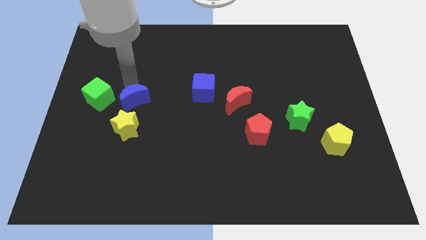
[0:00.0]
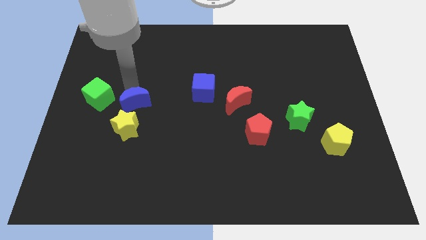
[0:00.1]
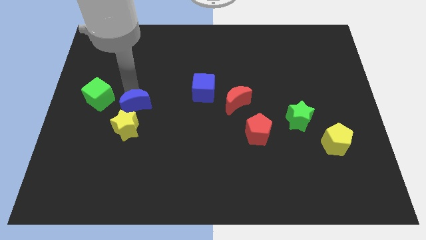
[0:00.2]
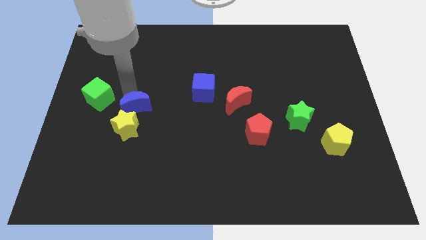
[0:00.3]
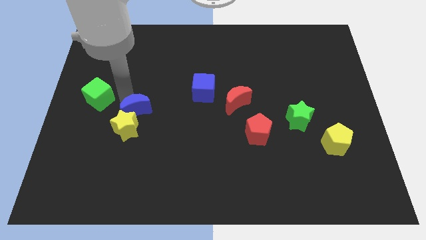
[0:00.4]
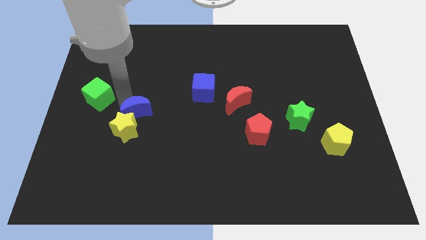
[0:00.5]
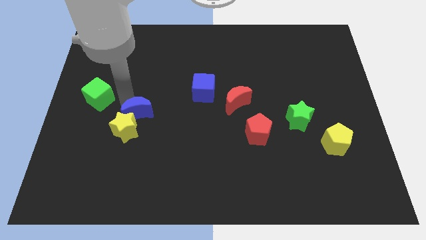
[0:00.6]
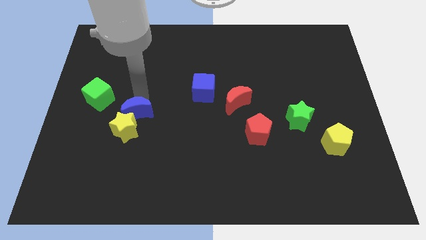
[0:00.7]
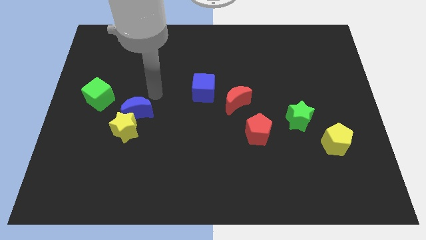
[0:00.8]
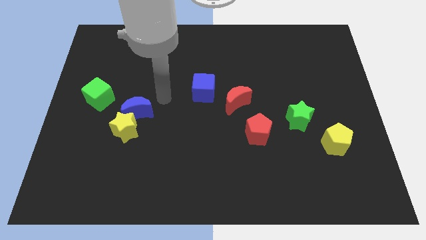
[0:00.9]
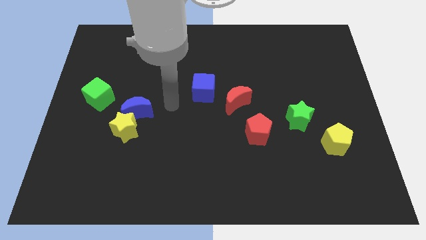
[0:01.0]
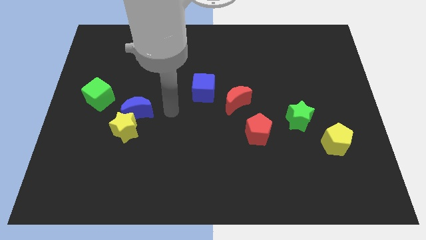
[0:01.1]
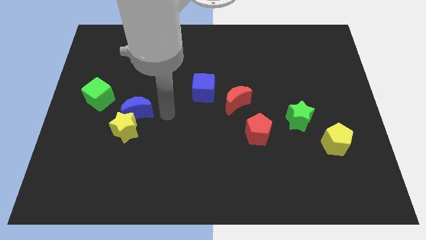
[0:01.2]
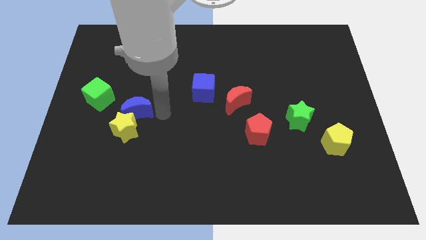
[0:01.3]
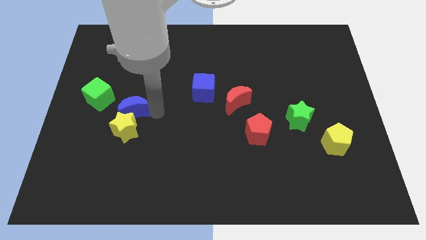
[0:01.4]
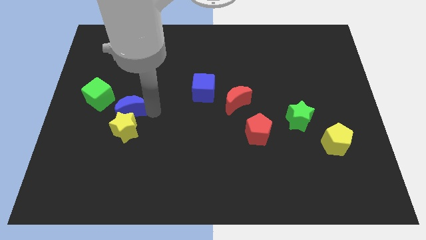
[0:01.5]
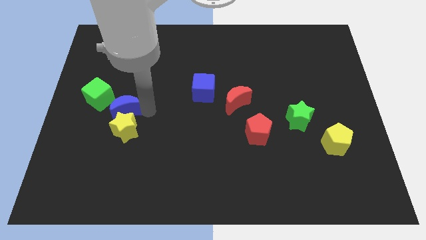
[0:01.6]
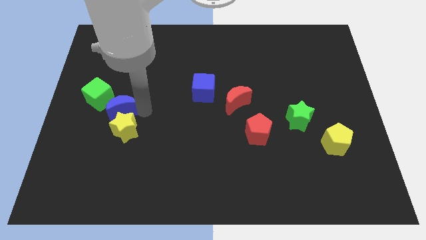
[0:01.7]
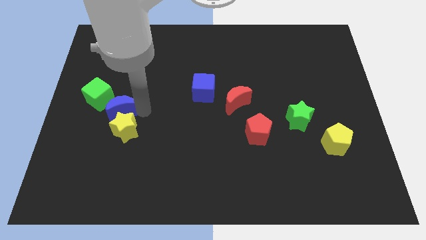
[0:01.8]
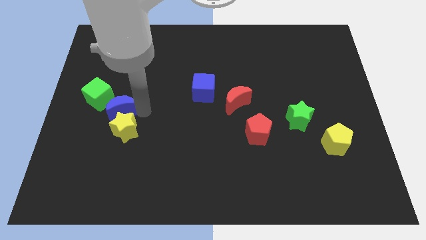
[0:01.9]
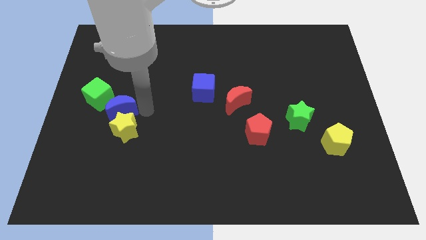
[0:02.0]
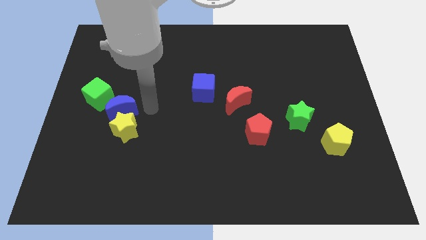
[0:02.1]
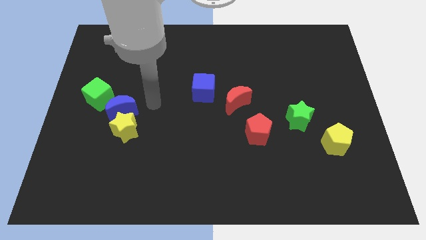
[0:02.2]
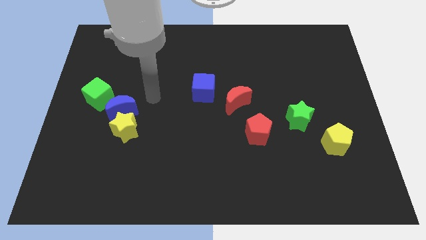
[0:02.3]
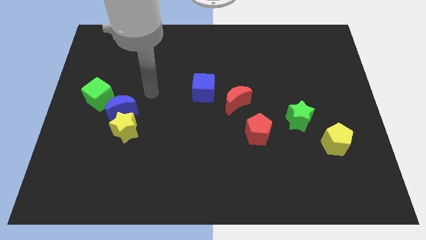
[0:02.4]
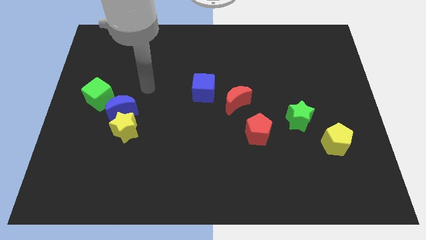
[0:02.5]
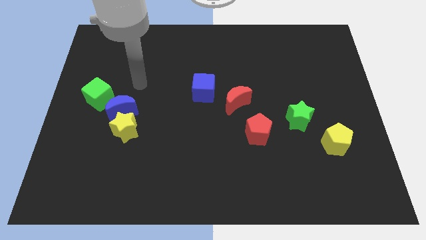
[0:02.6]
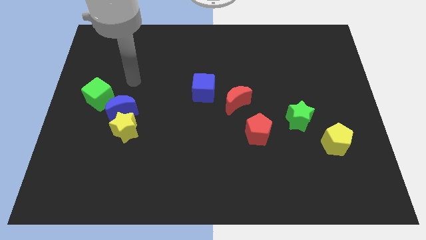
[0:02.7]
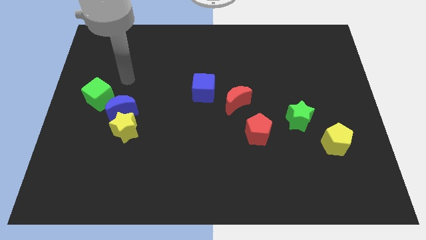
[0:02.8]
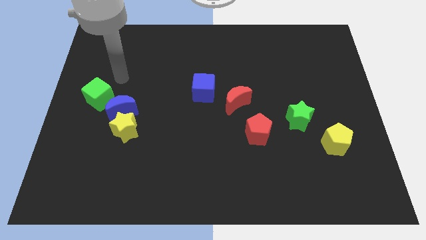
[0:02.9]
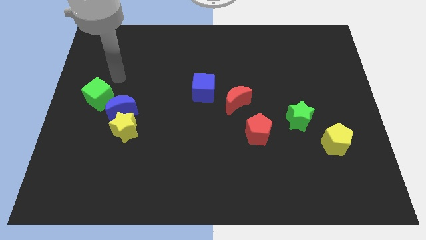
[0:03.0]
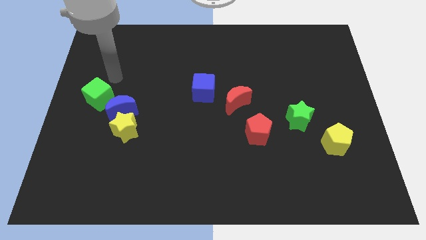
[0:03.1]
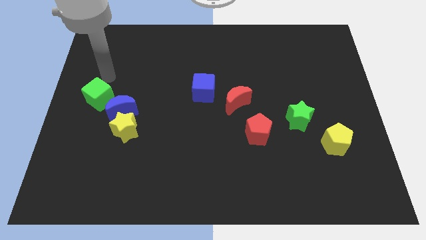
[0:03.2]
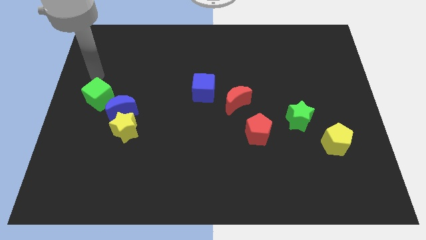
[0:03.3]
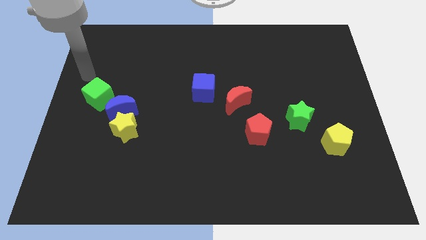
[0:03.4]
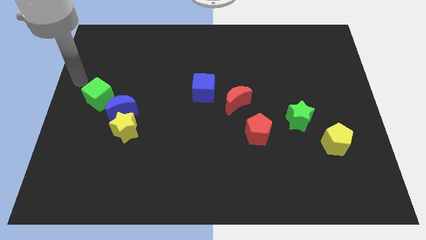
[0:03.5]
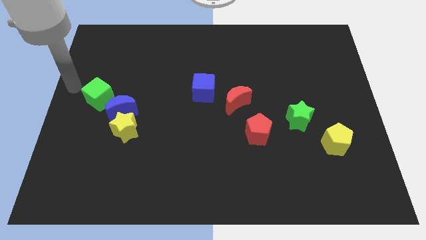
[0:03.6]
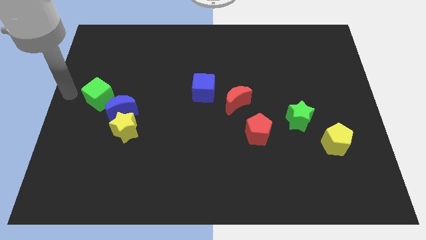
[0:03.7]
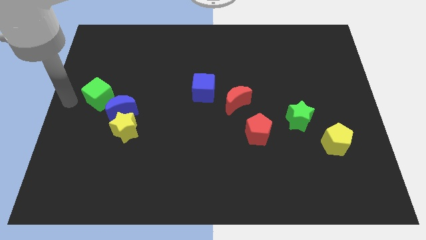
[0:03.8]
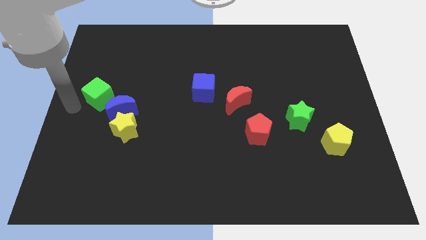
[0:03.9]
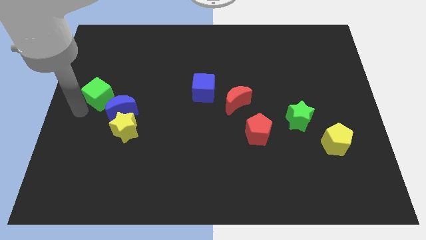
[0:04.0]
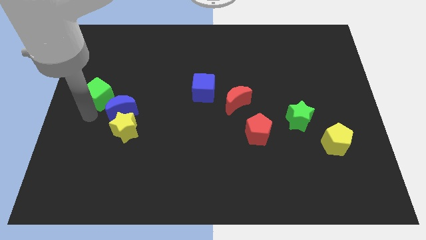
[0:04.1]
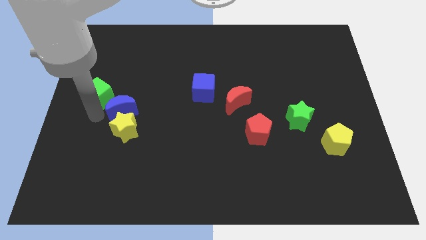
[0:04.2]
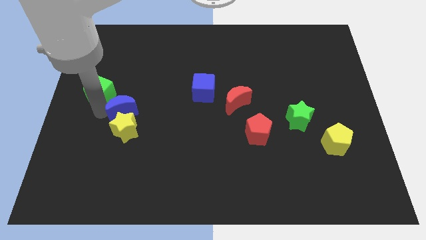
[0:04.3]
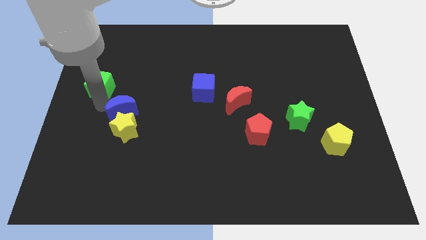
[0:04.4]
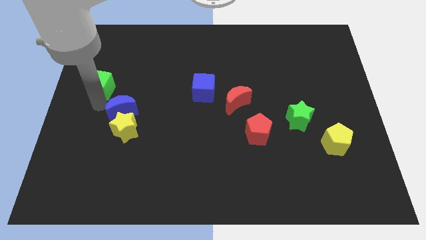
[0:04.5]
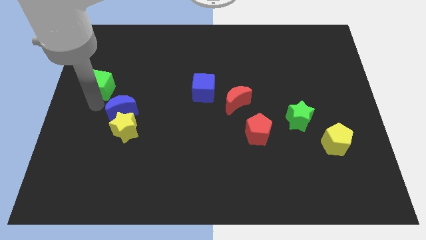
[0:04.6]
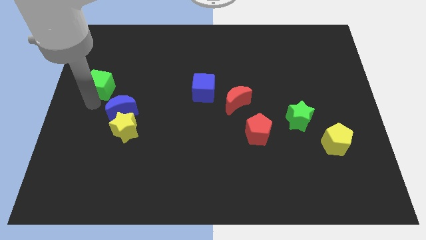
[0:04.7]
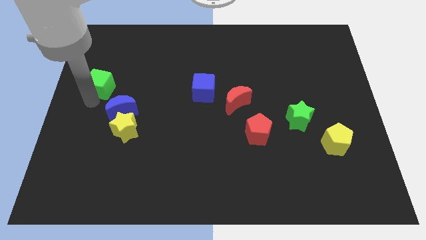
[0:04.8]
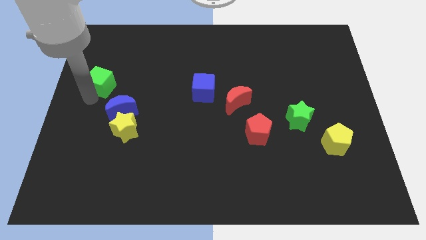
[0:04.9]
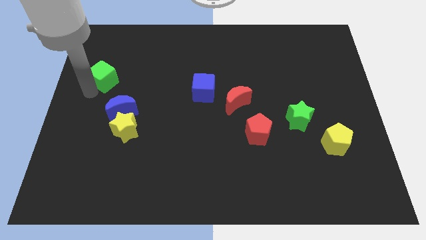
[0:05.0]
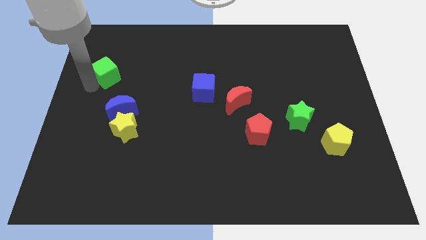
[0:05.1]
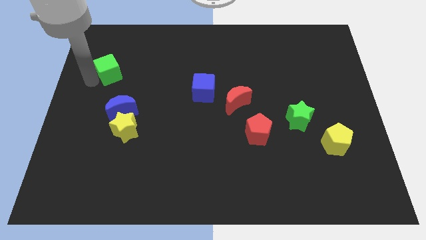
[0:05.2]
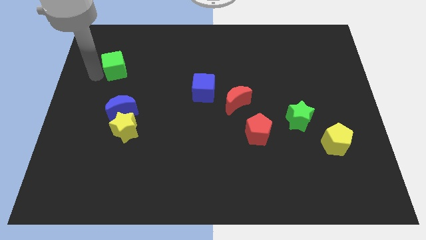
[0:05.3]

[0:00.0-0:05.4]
move the green cube away from the blue crescent

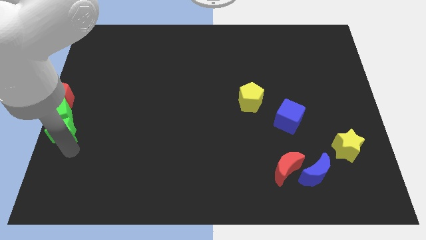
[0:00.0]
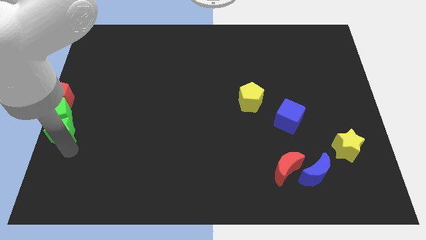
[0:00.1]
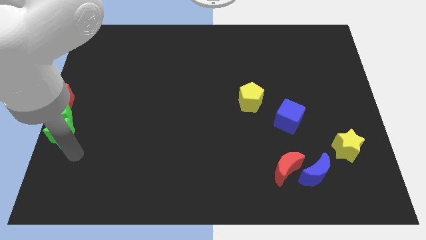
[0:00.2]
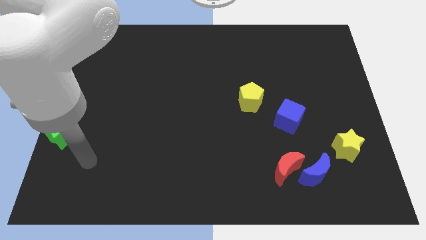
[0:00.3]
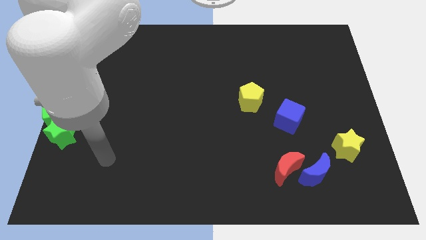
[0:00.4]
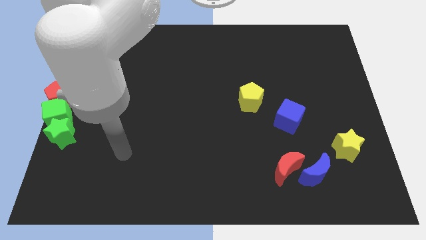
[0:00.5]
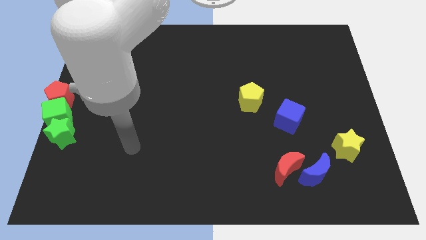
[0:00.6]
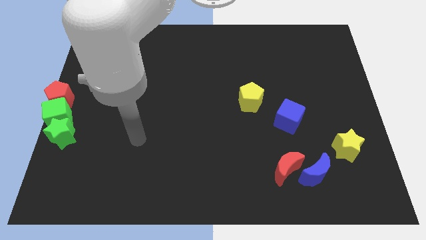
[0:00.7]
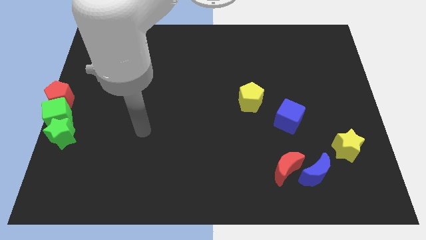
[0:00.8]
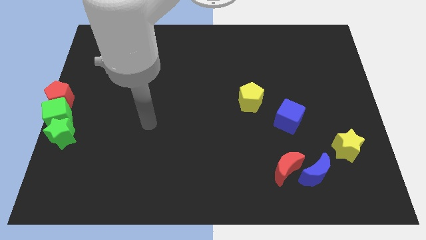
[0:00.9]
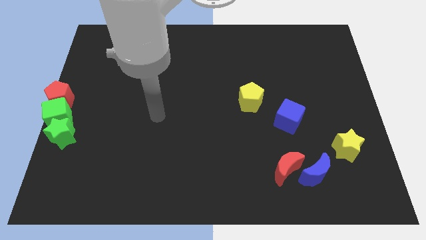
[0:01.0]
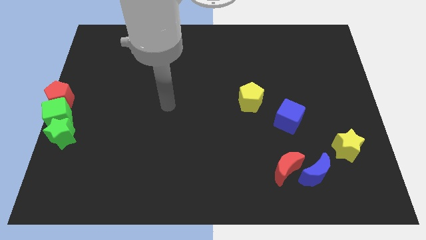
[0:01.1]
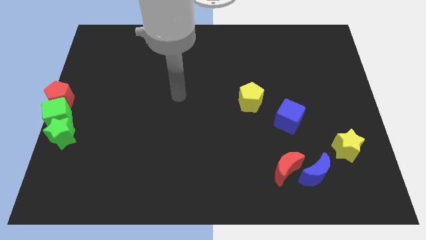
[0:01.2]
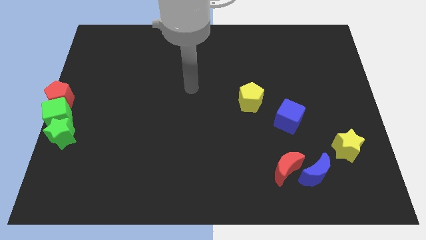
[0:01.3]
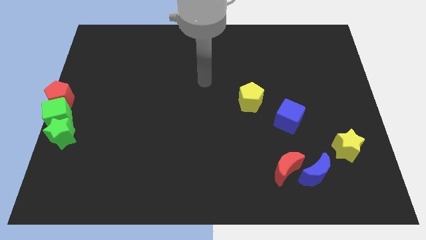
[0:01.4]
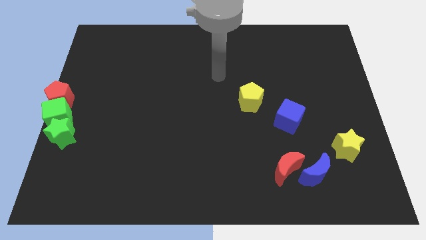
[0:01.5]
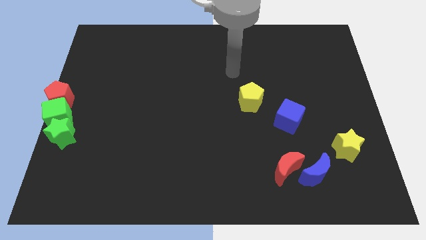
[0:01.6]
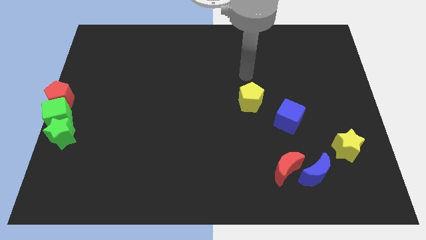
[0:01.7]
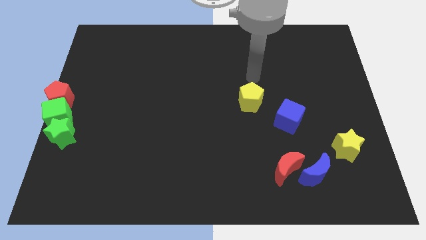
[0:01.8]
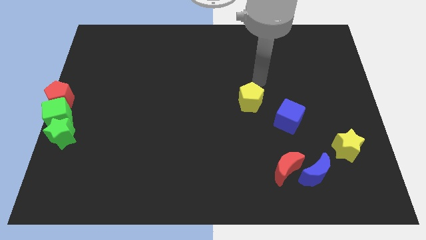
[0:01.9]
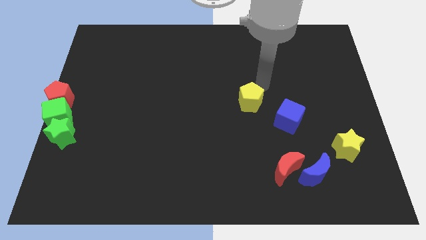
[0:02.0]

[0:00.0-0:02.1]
place the arm above the yellow pentagon

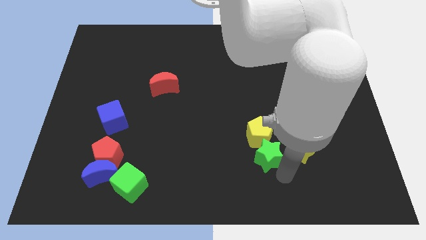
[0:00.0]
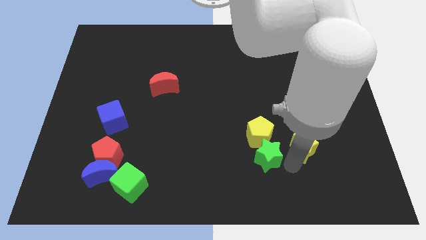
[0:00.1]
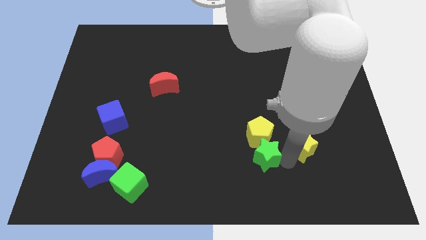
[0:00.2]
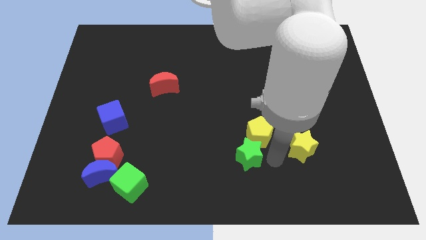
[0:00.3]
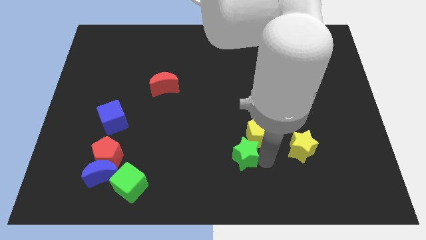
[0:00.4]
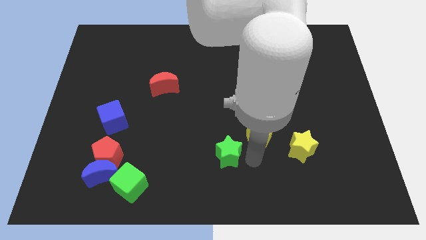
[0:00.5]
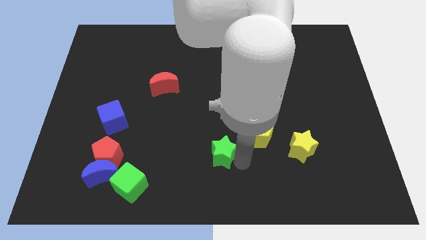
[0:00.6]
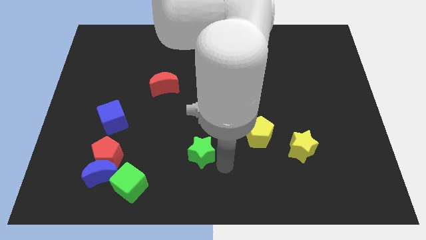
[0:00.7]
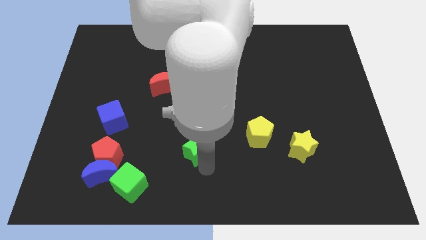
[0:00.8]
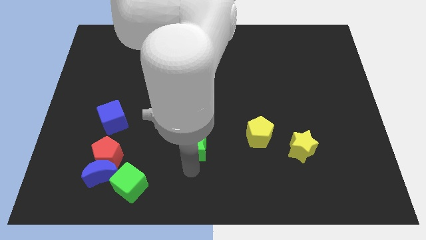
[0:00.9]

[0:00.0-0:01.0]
push the green star to the left side of the board

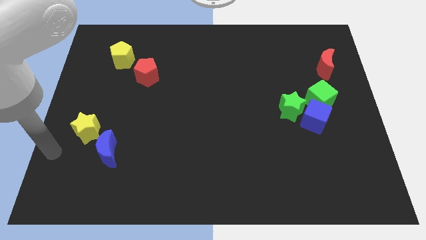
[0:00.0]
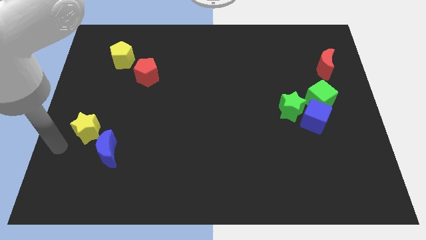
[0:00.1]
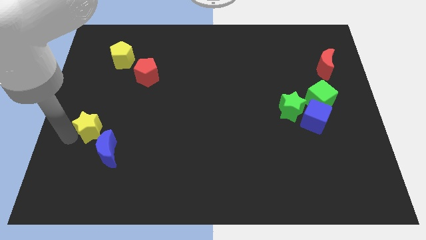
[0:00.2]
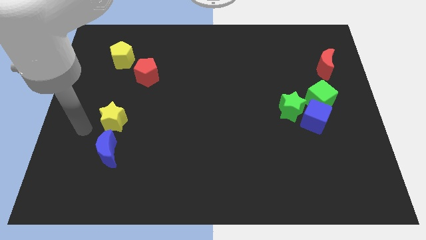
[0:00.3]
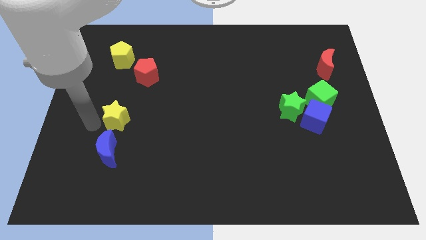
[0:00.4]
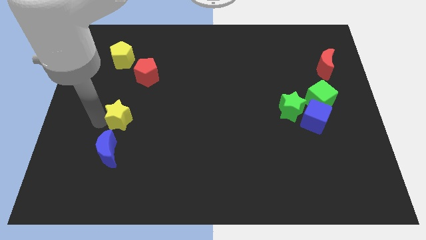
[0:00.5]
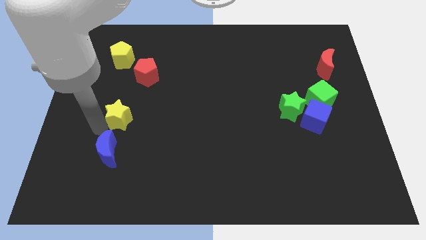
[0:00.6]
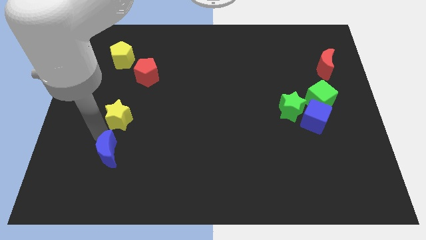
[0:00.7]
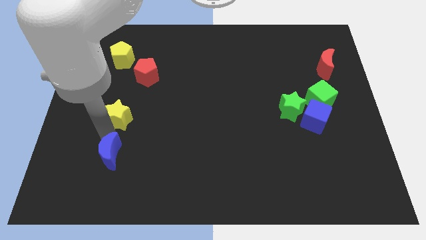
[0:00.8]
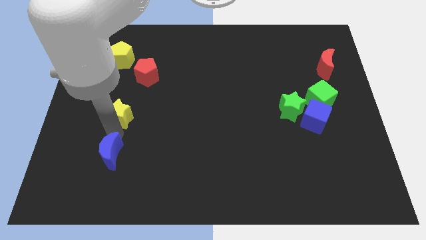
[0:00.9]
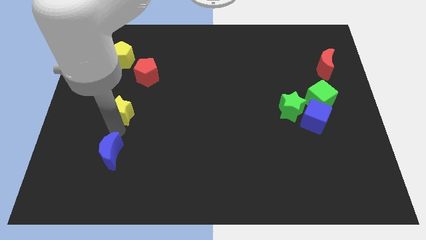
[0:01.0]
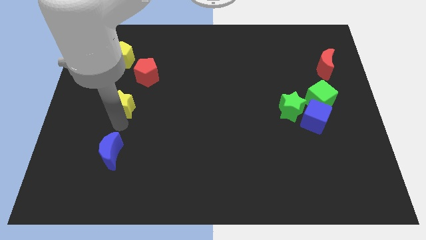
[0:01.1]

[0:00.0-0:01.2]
push the yellow star parallel to the yellow pentagon
